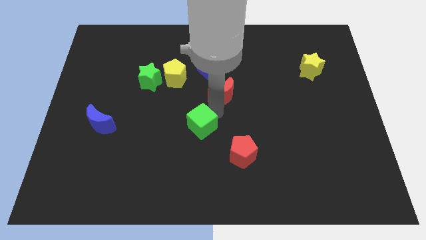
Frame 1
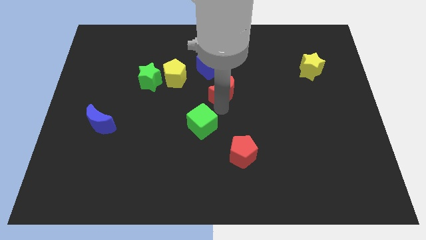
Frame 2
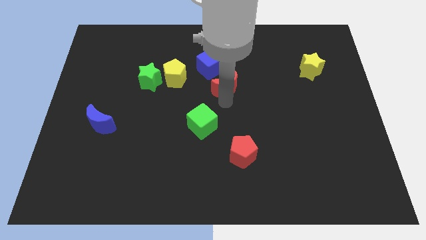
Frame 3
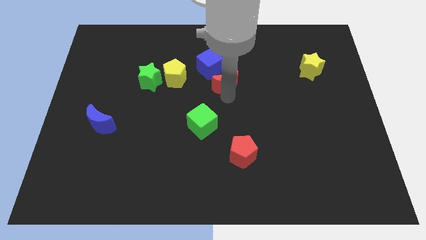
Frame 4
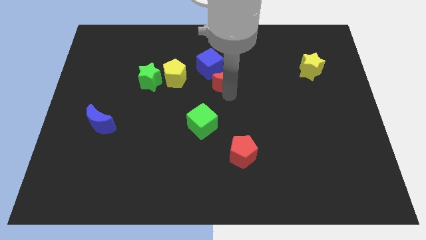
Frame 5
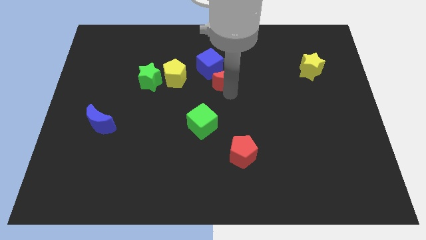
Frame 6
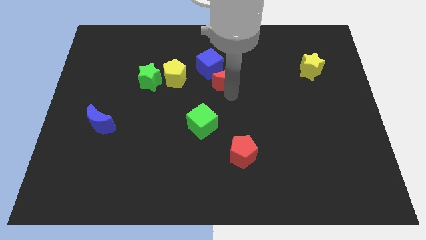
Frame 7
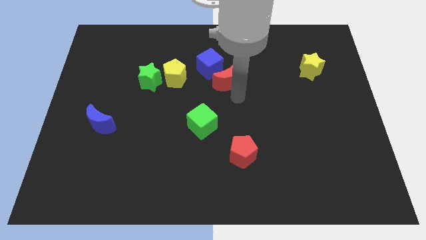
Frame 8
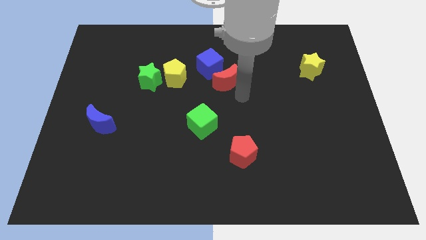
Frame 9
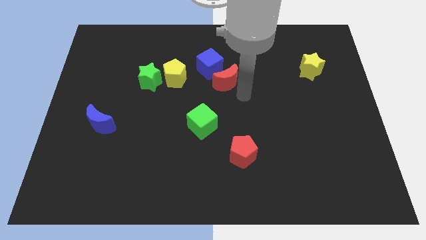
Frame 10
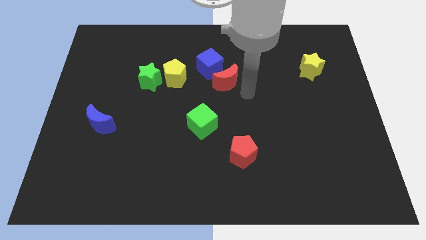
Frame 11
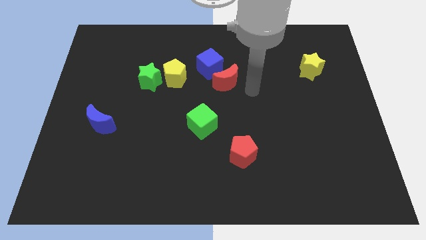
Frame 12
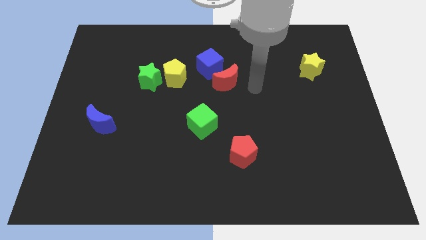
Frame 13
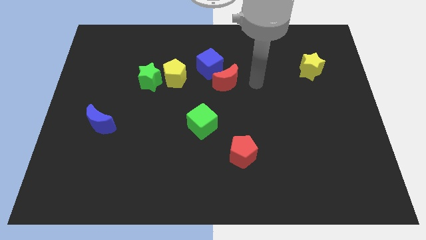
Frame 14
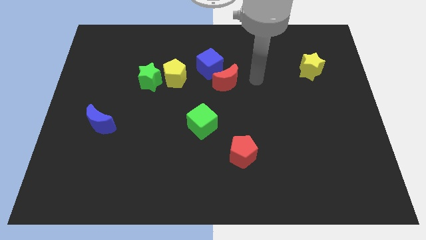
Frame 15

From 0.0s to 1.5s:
move the red crescent towards the blue cube

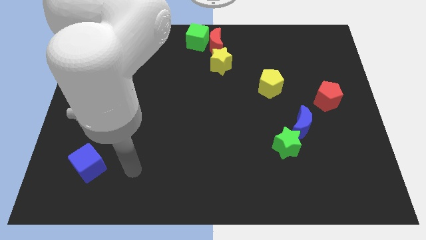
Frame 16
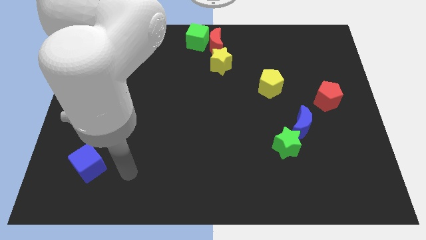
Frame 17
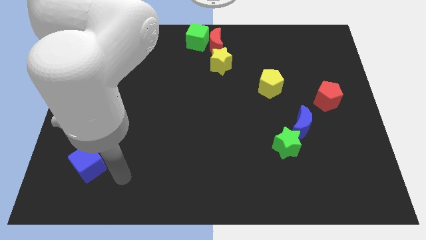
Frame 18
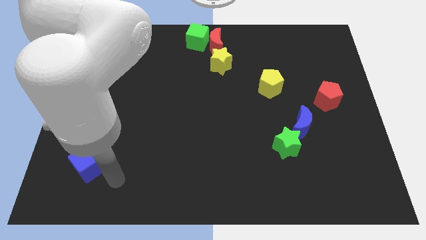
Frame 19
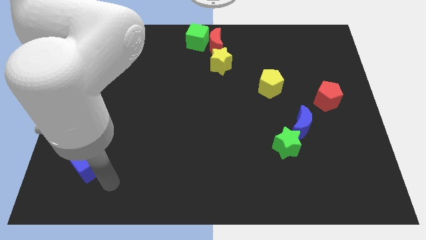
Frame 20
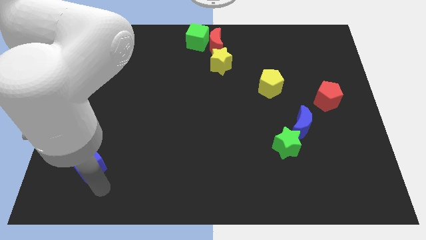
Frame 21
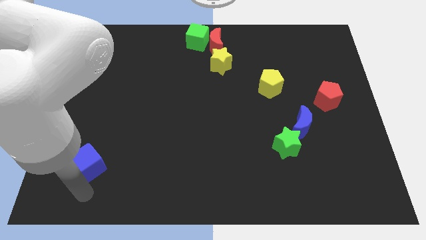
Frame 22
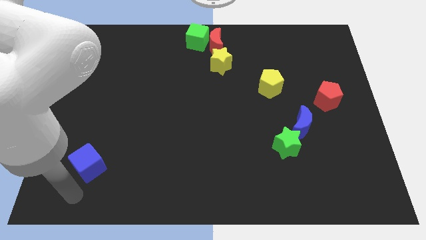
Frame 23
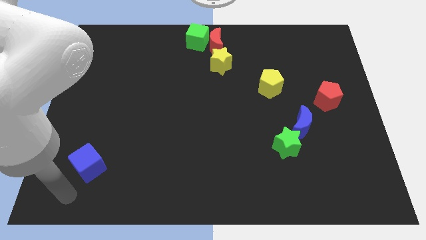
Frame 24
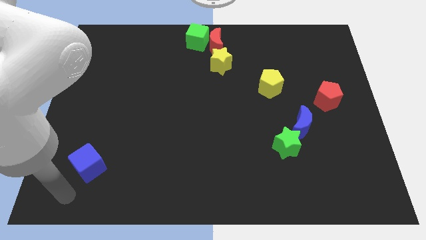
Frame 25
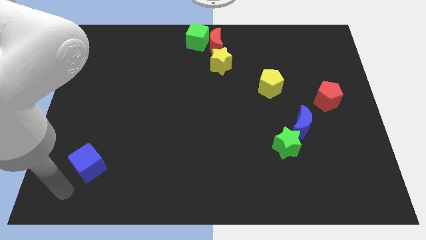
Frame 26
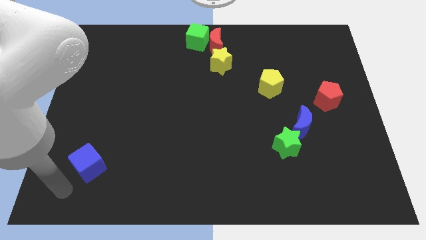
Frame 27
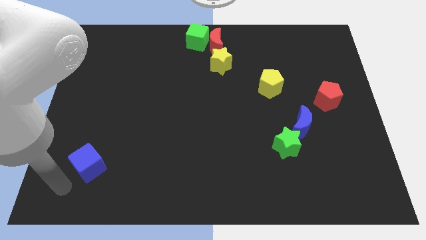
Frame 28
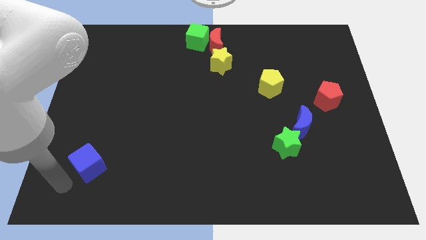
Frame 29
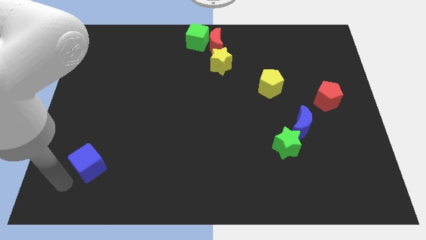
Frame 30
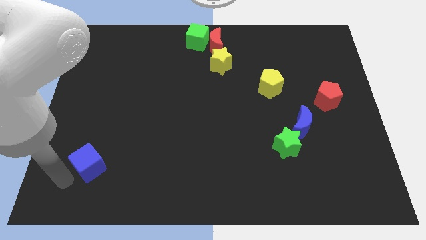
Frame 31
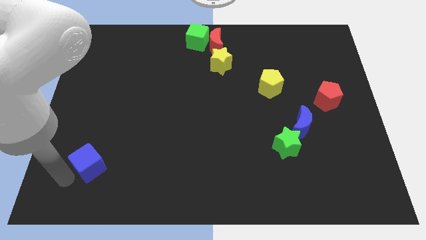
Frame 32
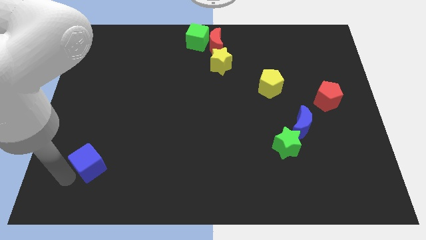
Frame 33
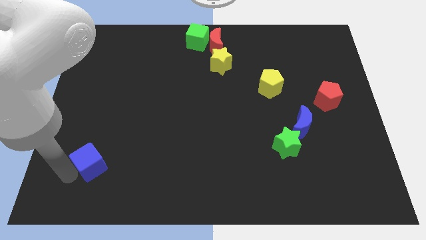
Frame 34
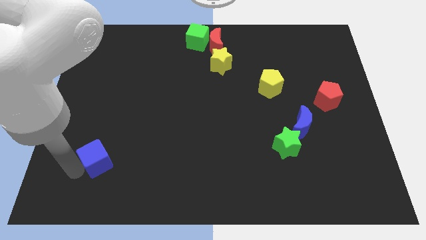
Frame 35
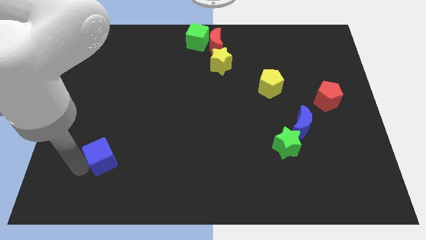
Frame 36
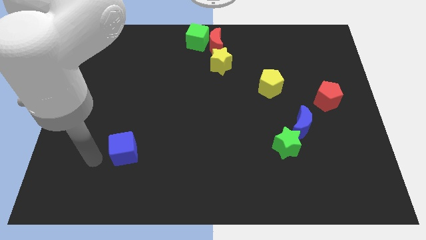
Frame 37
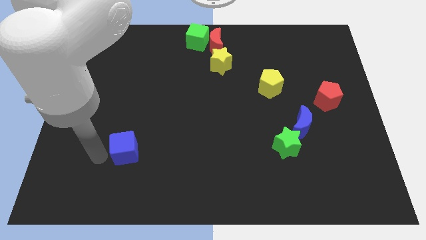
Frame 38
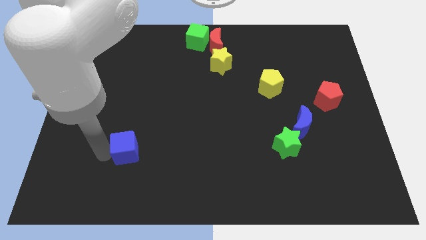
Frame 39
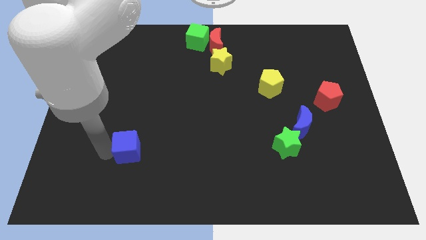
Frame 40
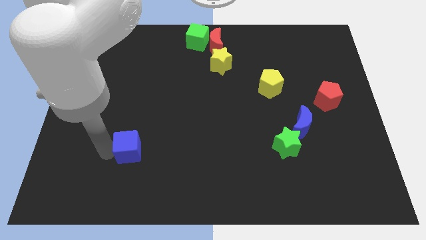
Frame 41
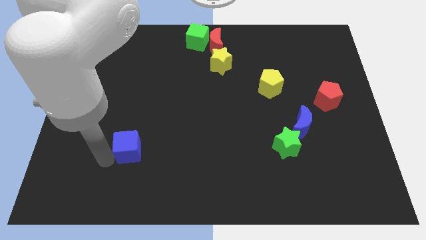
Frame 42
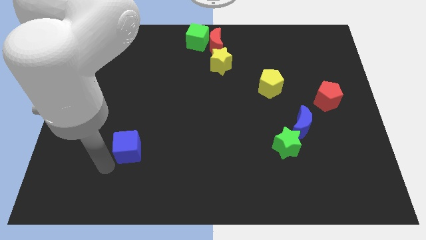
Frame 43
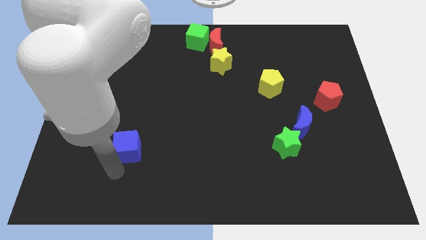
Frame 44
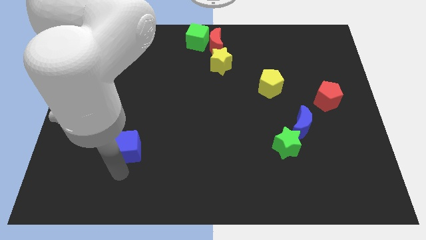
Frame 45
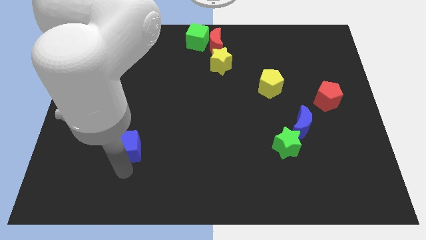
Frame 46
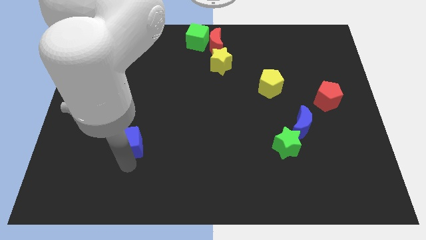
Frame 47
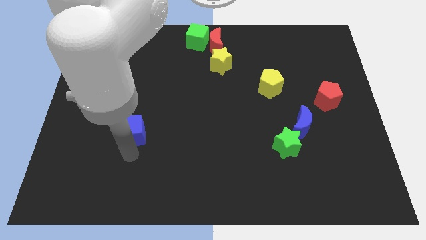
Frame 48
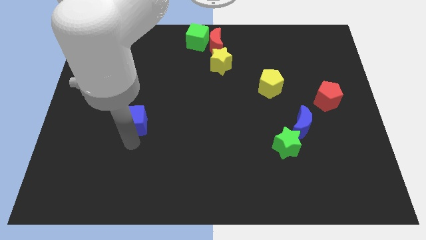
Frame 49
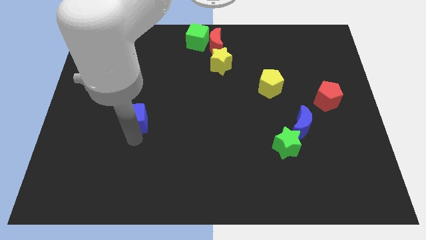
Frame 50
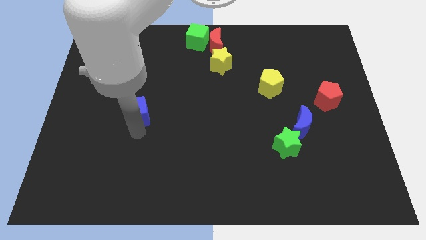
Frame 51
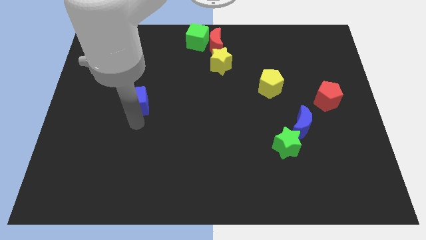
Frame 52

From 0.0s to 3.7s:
push the blue cube towards the top side of the board

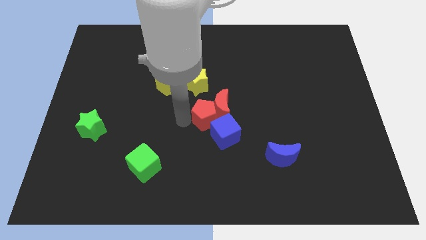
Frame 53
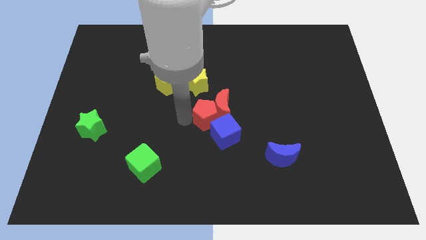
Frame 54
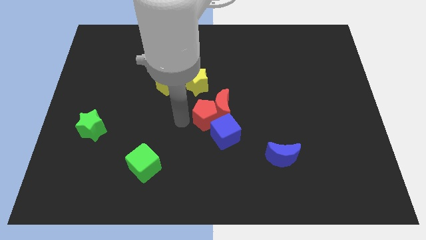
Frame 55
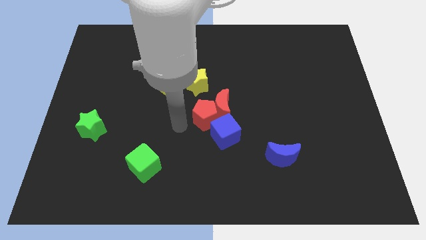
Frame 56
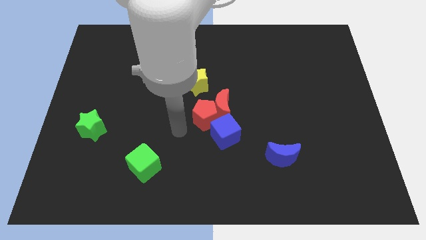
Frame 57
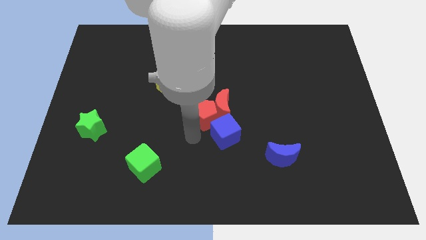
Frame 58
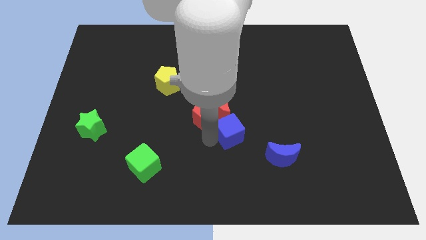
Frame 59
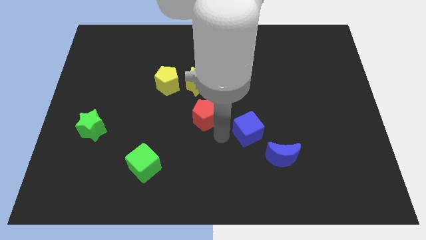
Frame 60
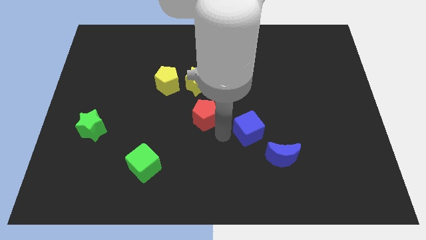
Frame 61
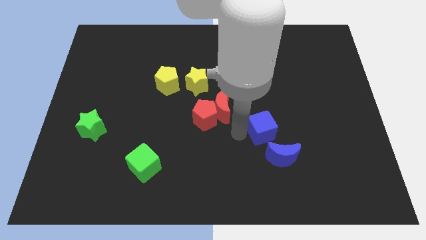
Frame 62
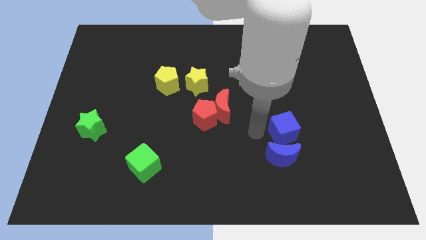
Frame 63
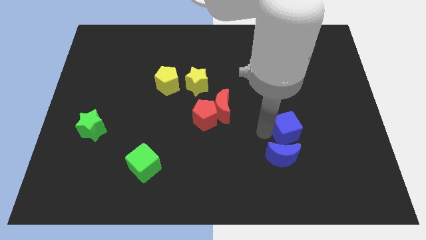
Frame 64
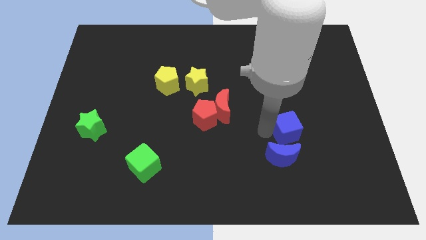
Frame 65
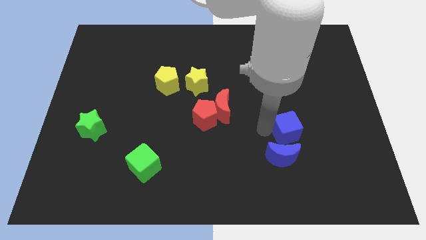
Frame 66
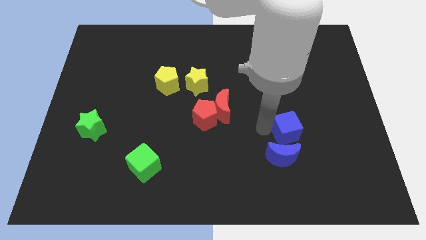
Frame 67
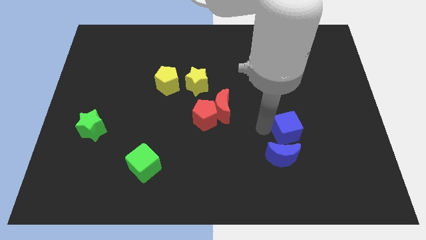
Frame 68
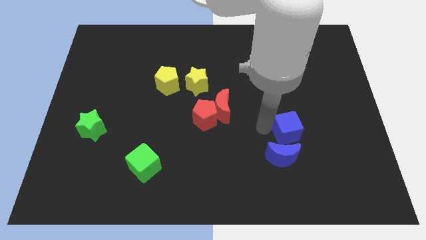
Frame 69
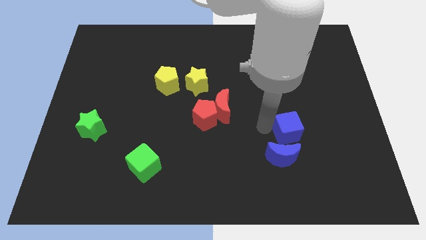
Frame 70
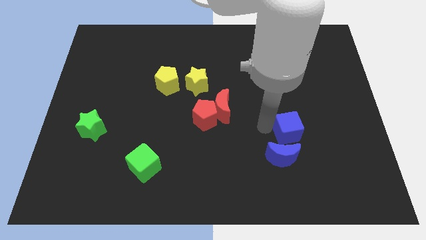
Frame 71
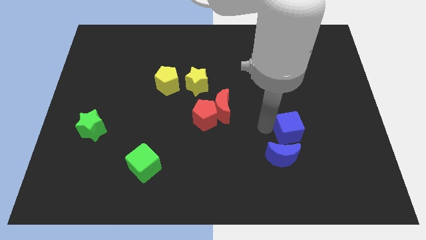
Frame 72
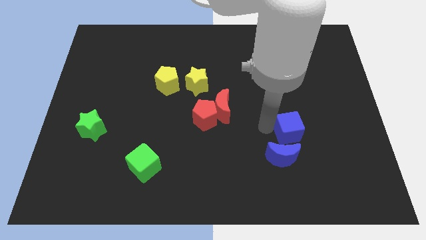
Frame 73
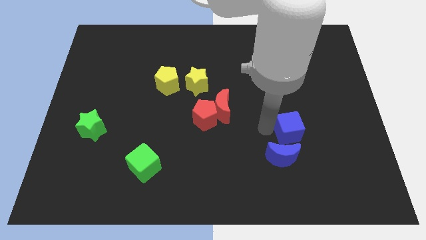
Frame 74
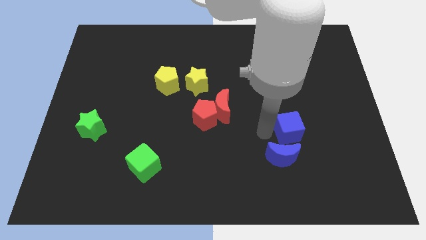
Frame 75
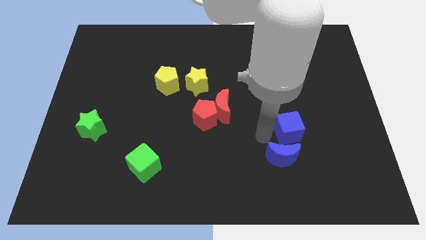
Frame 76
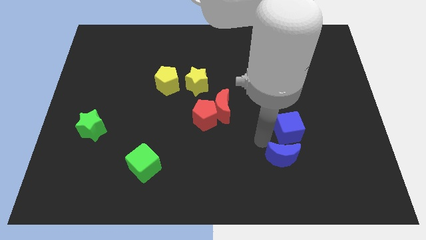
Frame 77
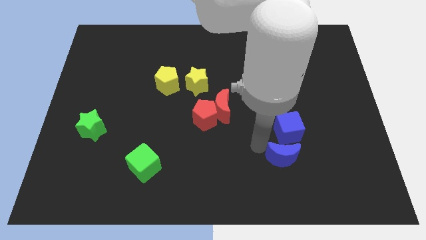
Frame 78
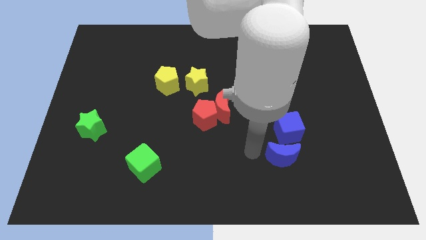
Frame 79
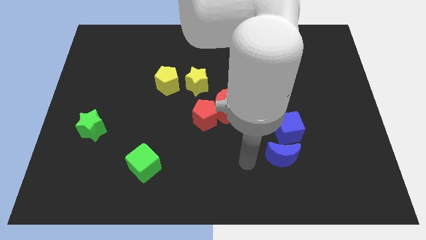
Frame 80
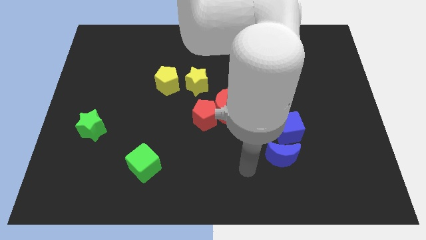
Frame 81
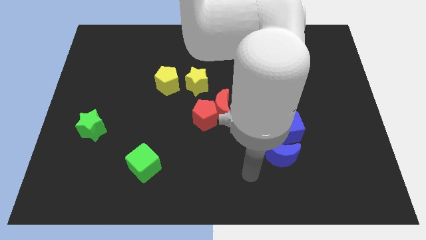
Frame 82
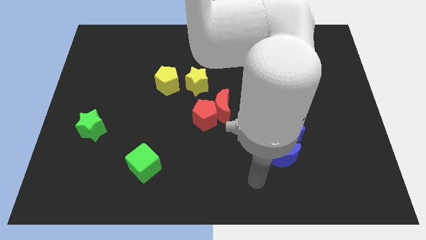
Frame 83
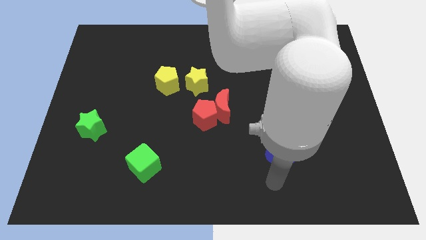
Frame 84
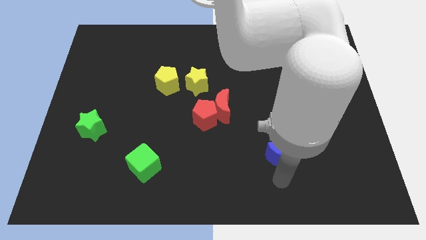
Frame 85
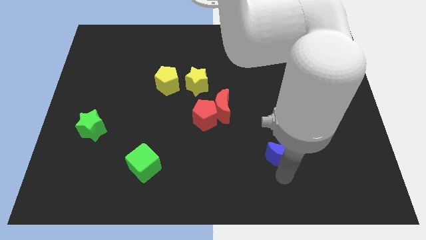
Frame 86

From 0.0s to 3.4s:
move the blue cube above to the blue moon

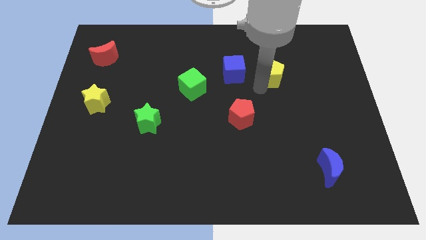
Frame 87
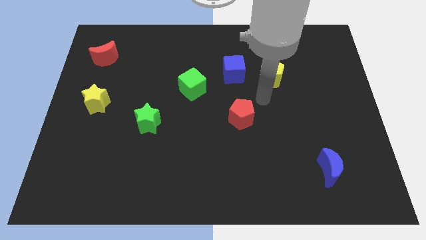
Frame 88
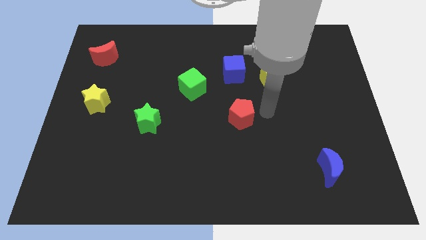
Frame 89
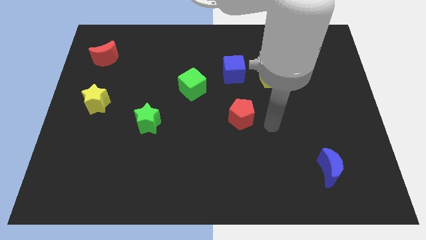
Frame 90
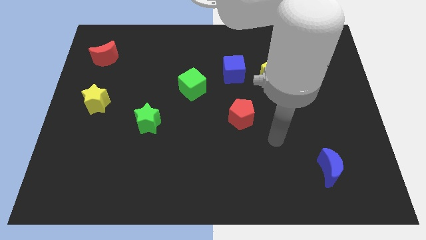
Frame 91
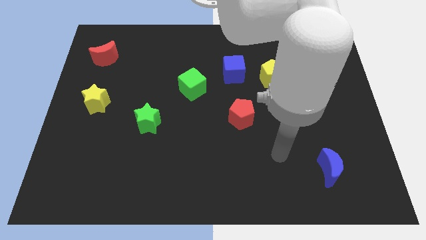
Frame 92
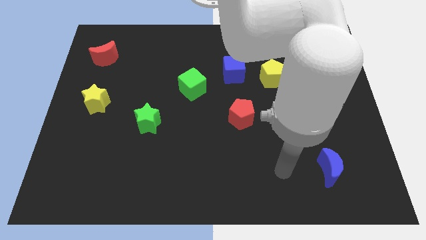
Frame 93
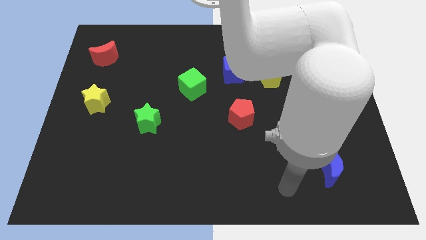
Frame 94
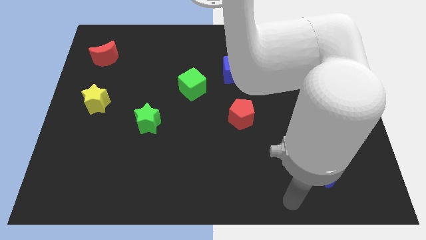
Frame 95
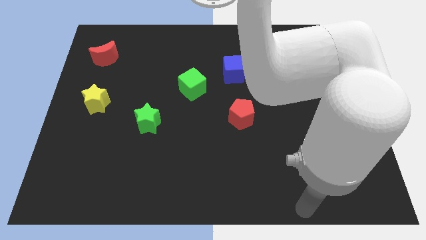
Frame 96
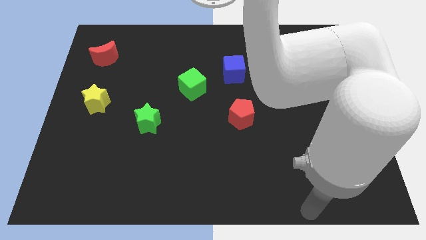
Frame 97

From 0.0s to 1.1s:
move your arm towards the bottom of the board
